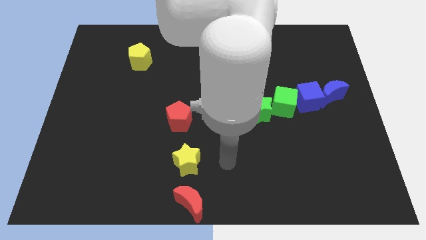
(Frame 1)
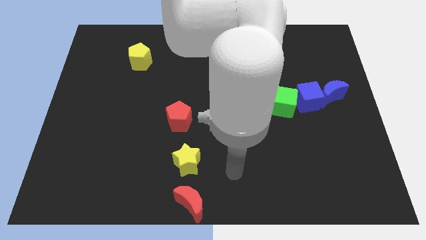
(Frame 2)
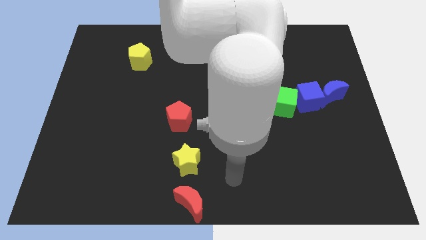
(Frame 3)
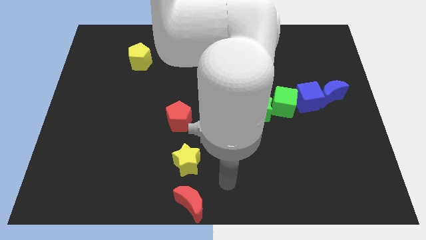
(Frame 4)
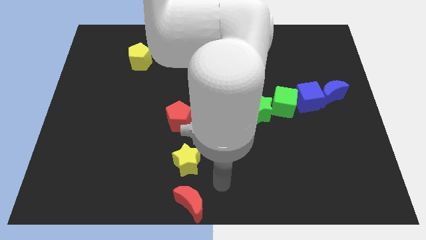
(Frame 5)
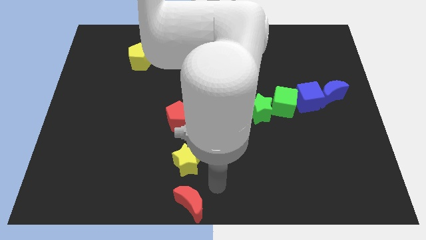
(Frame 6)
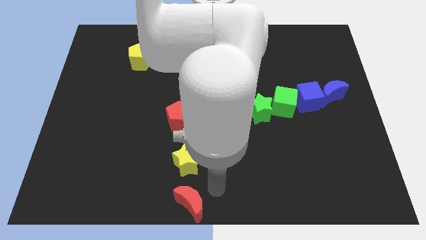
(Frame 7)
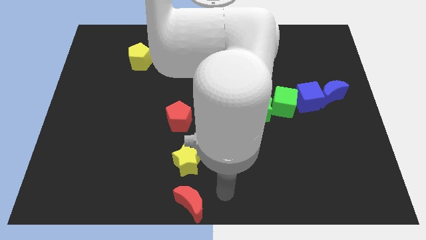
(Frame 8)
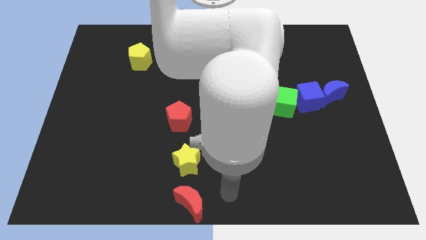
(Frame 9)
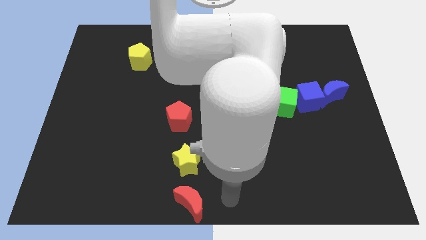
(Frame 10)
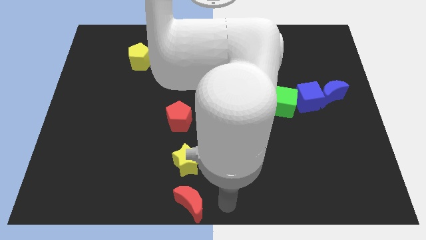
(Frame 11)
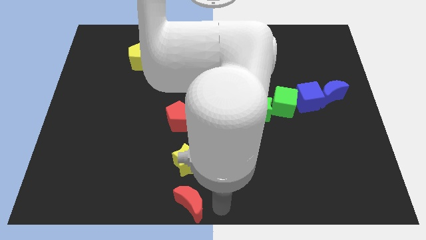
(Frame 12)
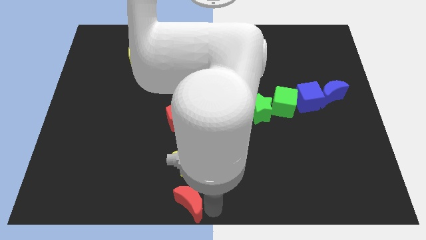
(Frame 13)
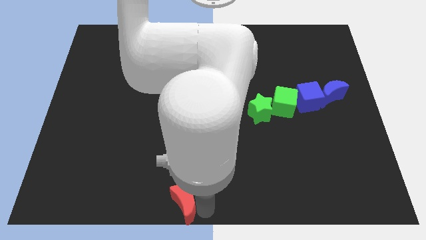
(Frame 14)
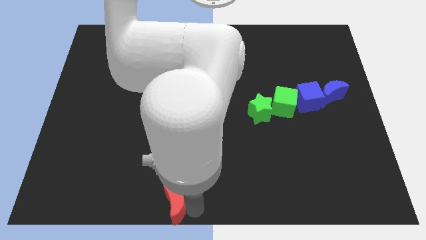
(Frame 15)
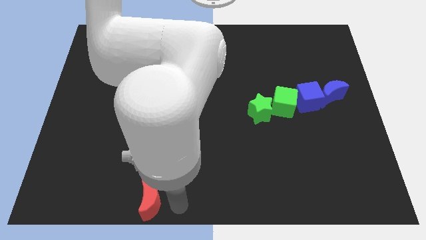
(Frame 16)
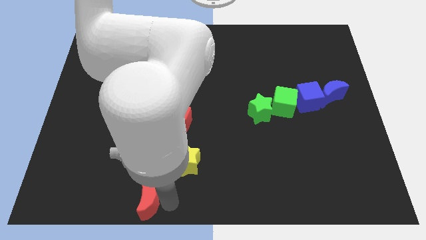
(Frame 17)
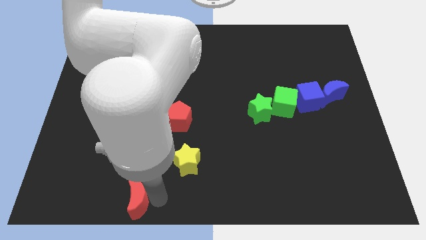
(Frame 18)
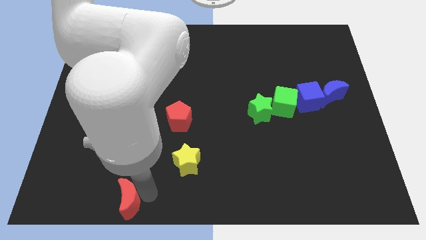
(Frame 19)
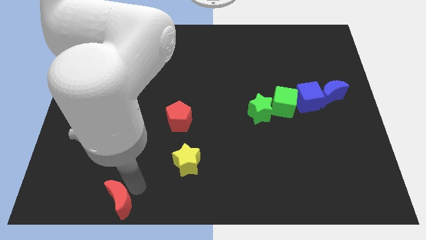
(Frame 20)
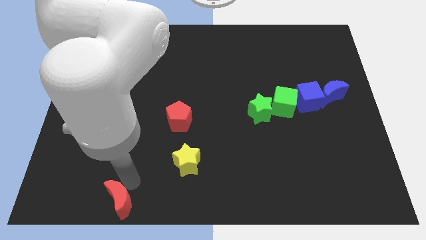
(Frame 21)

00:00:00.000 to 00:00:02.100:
move the red moon towards the bottom left

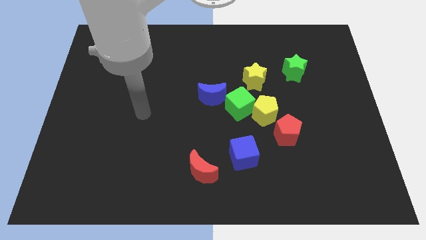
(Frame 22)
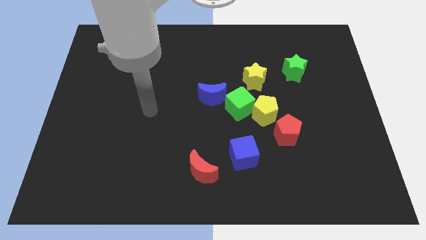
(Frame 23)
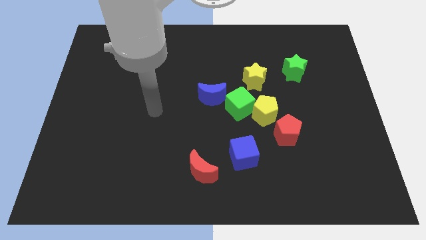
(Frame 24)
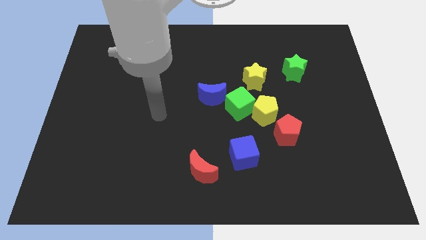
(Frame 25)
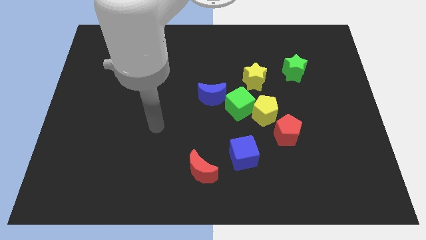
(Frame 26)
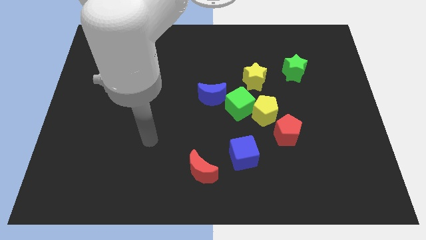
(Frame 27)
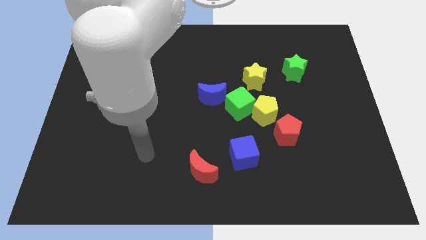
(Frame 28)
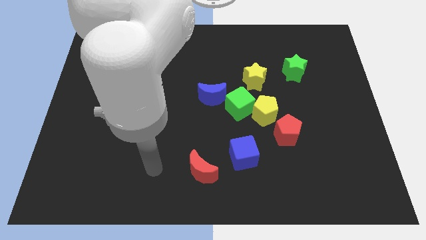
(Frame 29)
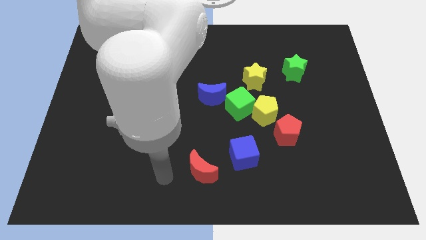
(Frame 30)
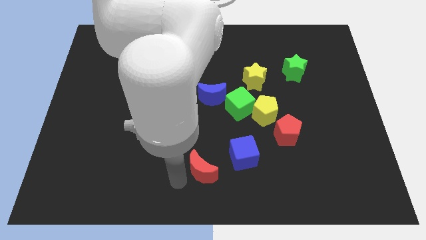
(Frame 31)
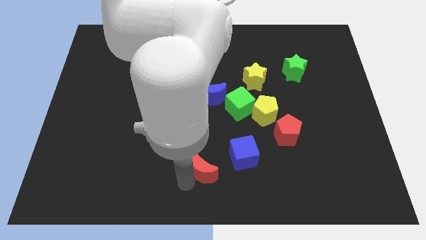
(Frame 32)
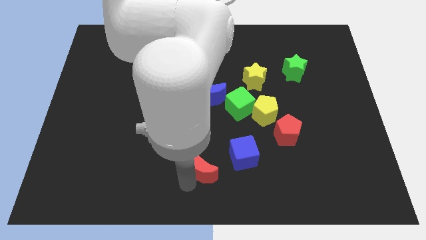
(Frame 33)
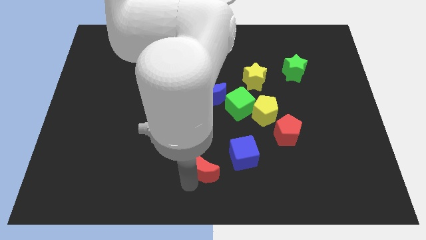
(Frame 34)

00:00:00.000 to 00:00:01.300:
place the arm diagonally to the red moon

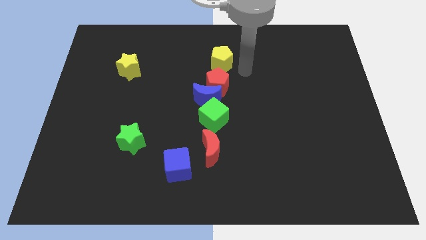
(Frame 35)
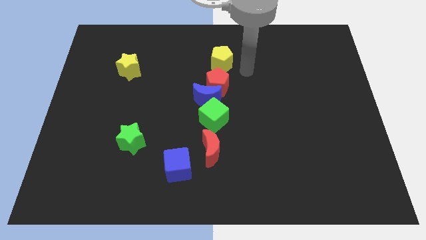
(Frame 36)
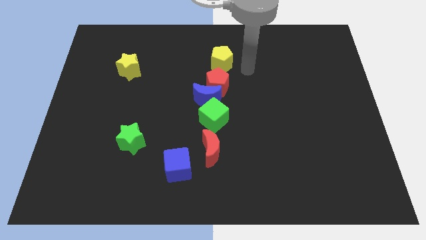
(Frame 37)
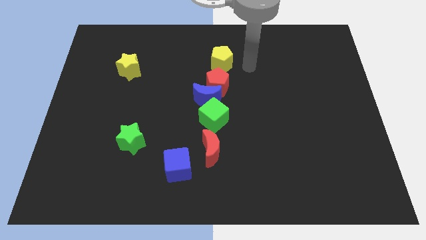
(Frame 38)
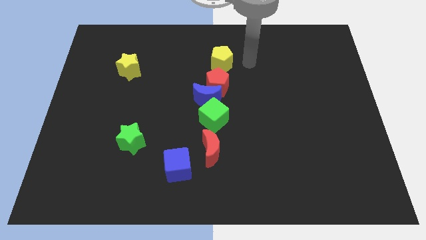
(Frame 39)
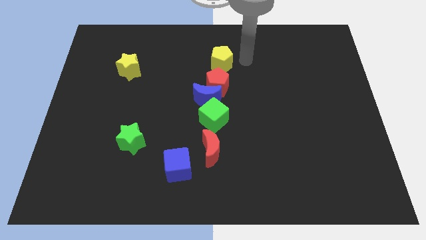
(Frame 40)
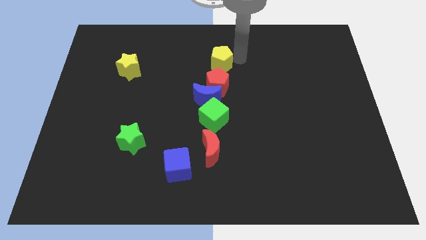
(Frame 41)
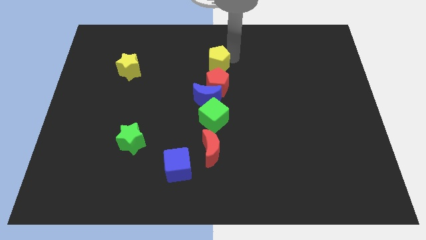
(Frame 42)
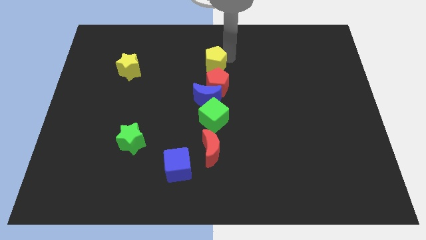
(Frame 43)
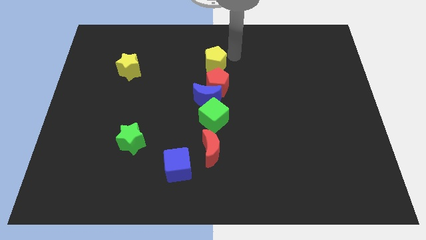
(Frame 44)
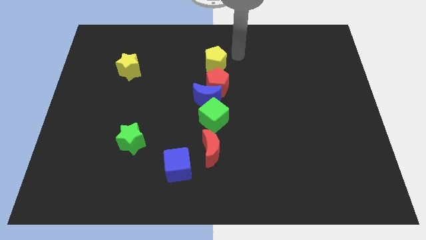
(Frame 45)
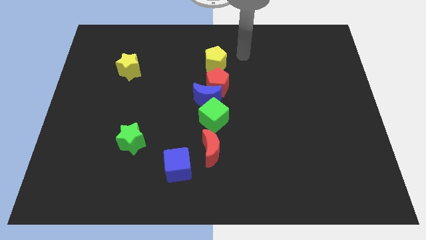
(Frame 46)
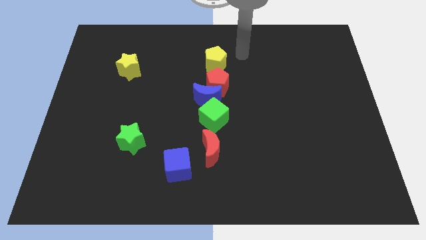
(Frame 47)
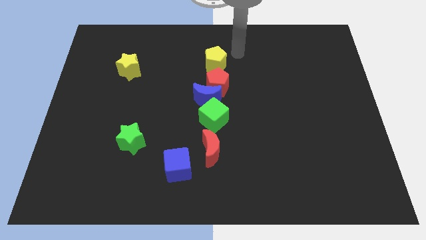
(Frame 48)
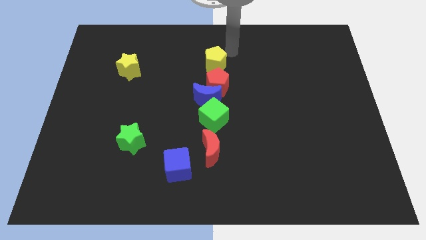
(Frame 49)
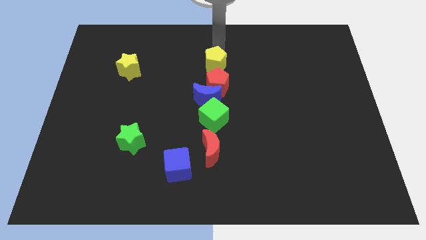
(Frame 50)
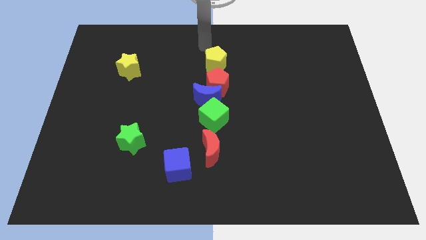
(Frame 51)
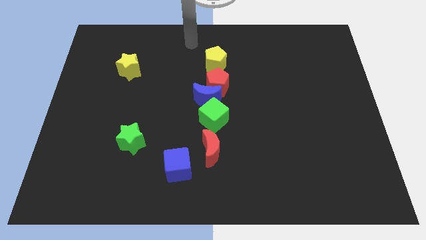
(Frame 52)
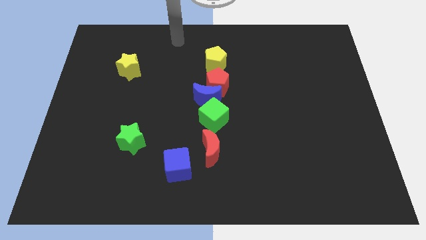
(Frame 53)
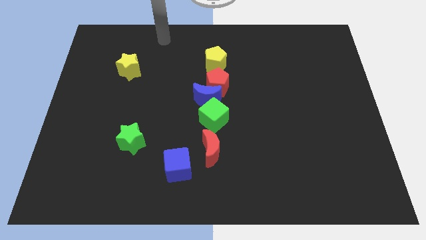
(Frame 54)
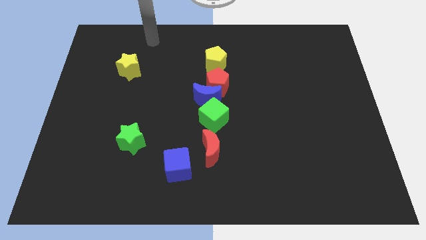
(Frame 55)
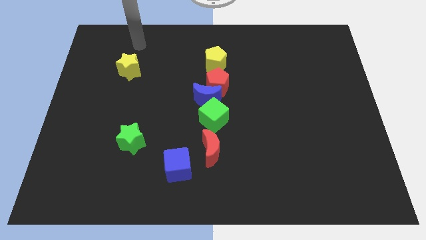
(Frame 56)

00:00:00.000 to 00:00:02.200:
push yellow pentagon properly

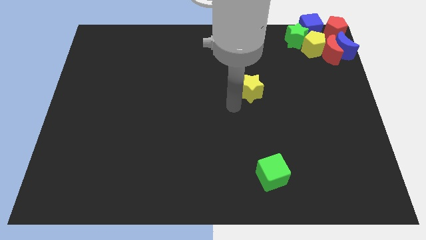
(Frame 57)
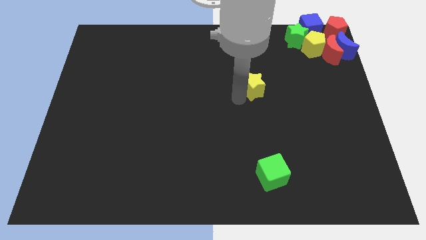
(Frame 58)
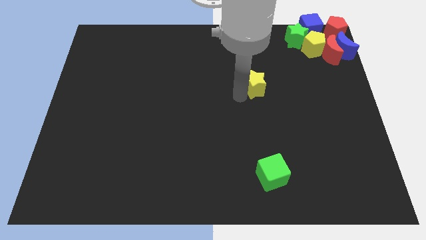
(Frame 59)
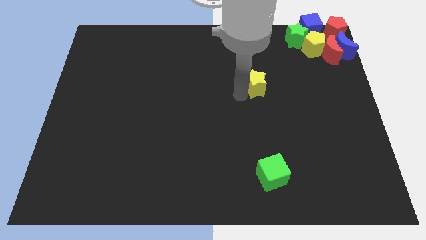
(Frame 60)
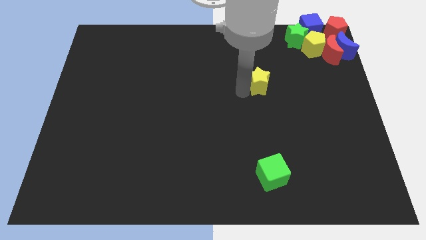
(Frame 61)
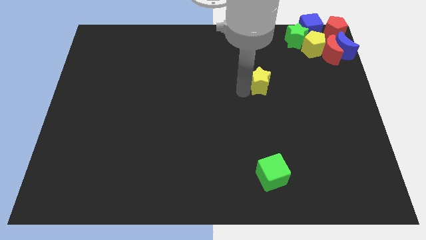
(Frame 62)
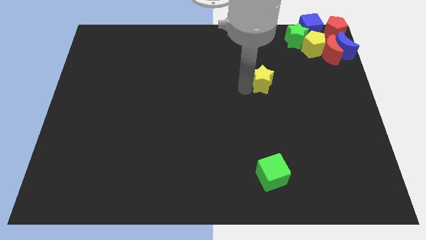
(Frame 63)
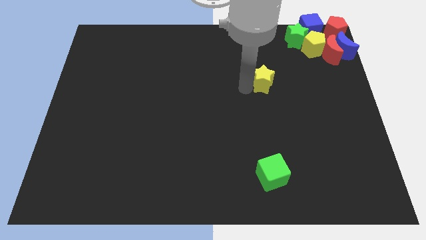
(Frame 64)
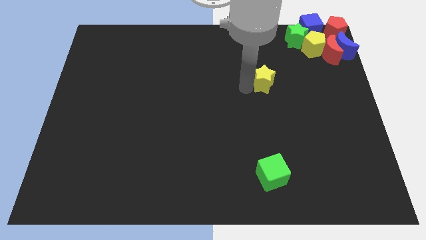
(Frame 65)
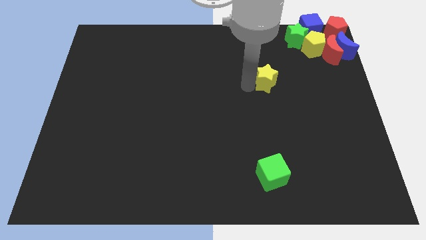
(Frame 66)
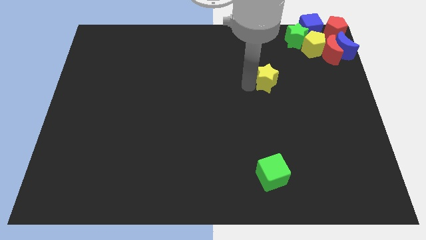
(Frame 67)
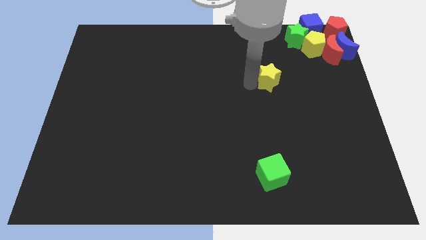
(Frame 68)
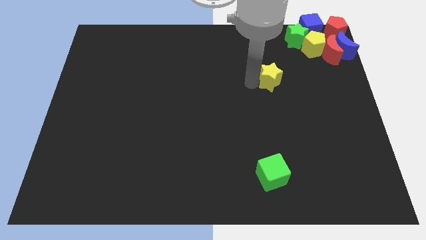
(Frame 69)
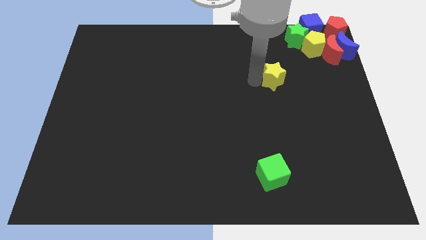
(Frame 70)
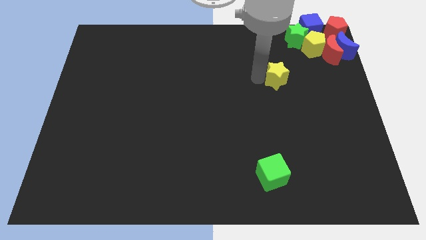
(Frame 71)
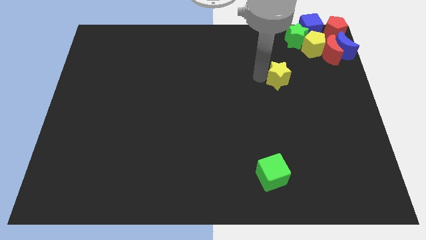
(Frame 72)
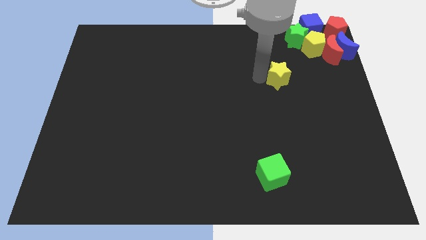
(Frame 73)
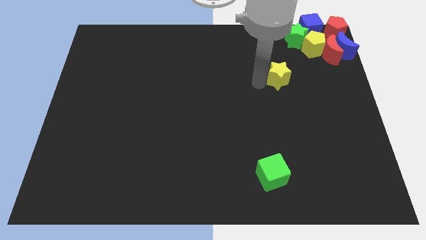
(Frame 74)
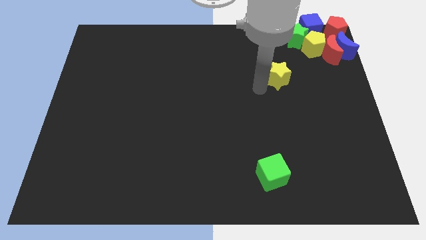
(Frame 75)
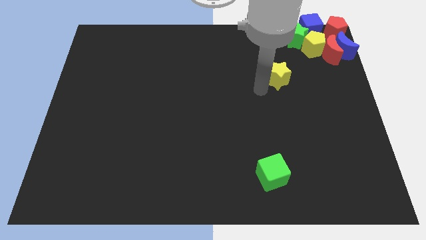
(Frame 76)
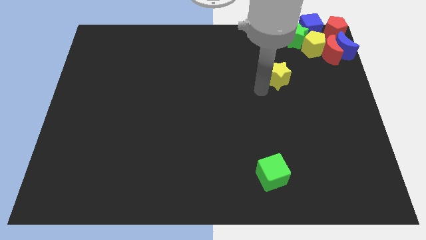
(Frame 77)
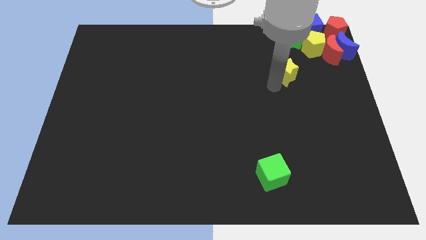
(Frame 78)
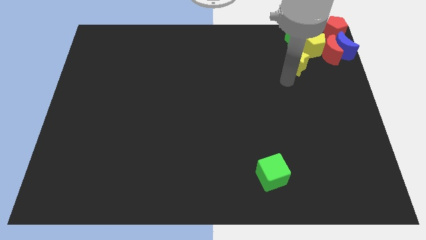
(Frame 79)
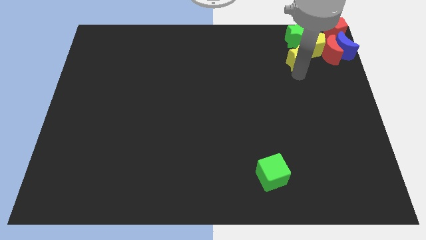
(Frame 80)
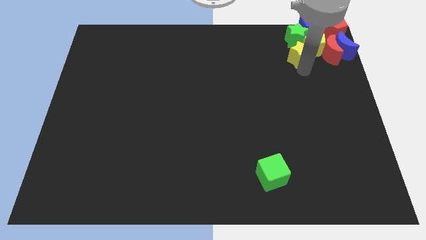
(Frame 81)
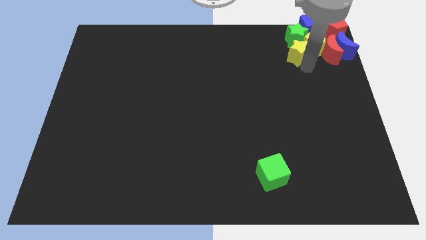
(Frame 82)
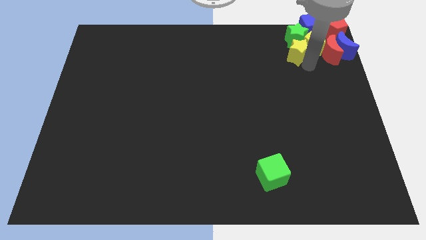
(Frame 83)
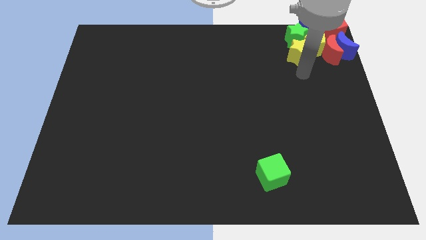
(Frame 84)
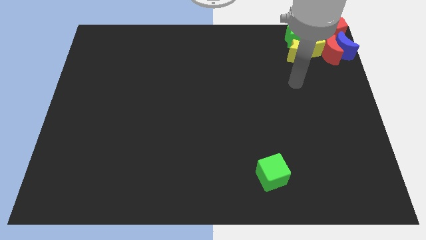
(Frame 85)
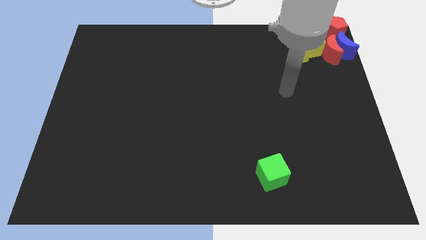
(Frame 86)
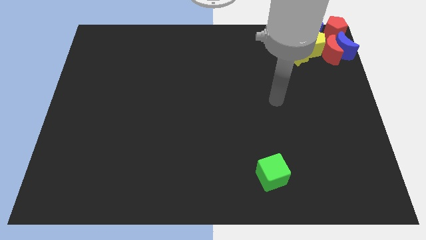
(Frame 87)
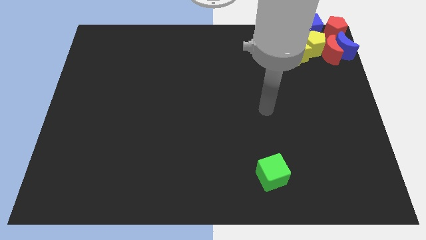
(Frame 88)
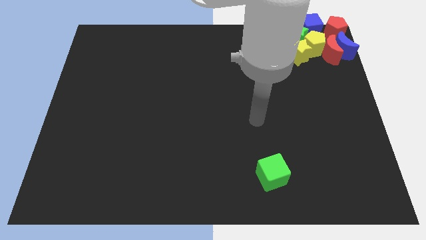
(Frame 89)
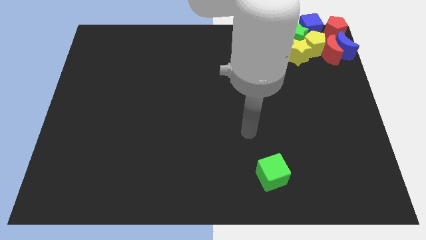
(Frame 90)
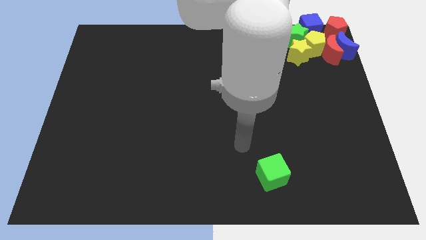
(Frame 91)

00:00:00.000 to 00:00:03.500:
push the yellow star to the top right of the board
